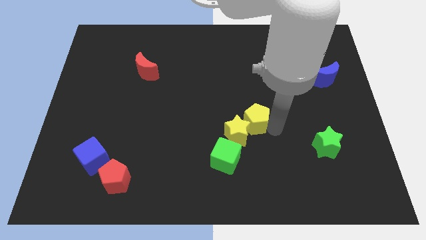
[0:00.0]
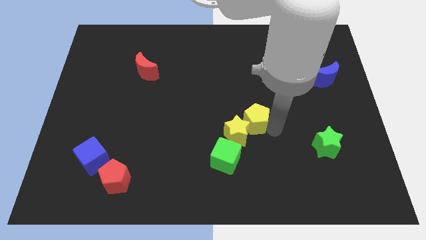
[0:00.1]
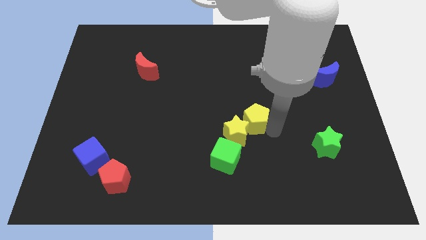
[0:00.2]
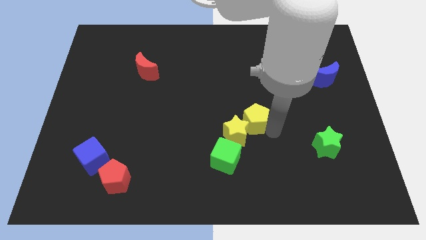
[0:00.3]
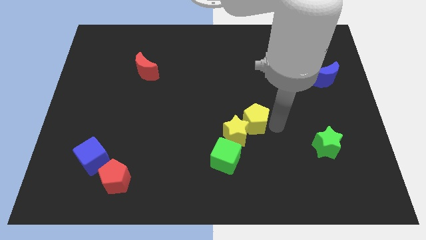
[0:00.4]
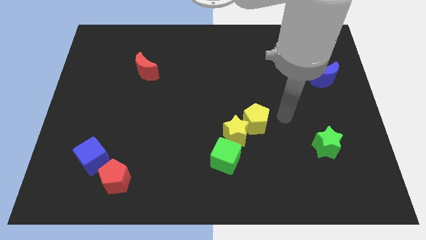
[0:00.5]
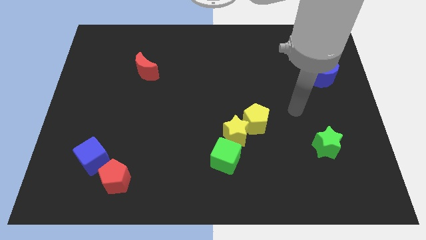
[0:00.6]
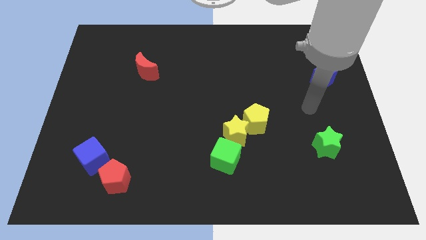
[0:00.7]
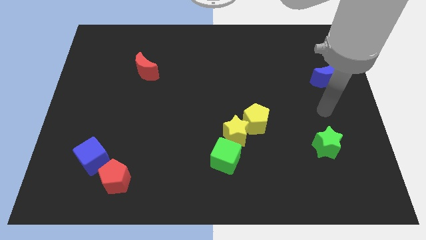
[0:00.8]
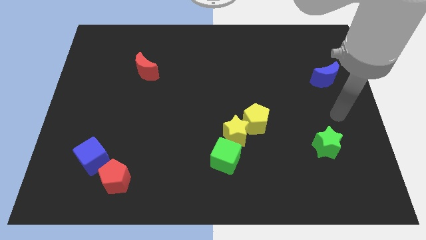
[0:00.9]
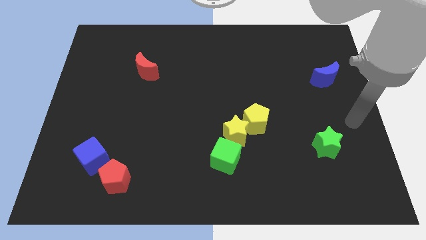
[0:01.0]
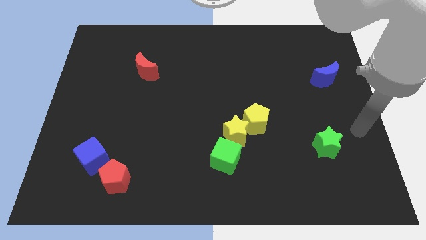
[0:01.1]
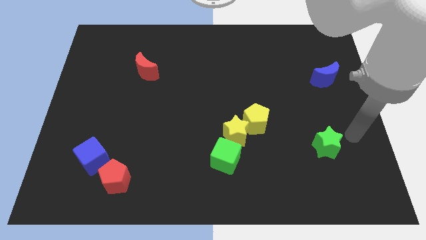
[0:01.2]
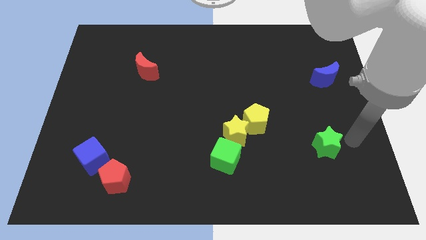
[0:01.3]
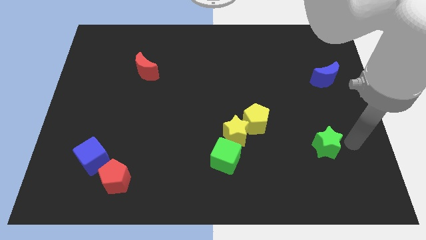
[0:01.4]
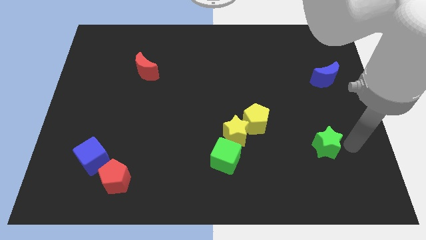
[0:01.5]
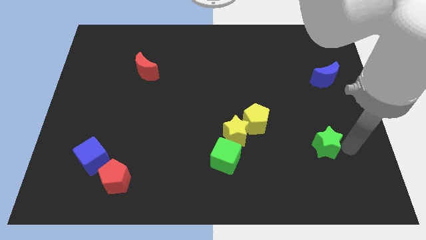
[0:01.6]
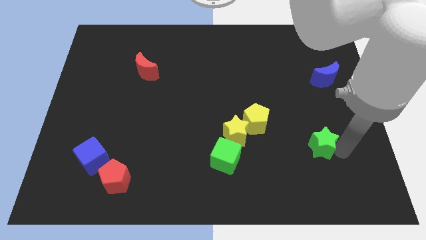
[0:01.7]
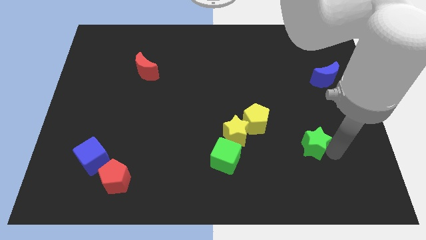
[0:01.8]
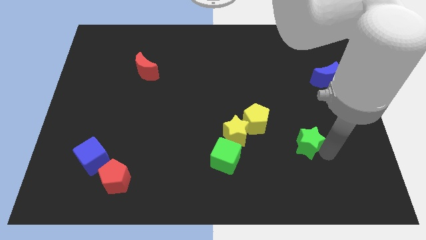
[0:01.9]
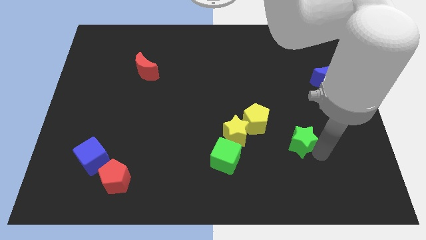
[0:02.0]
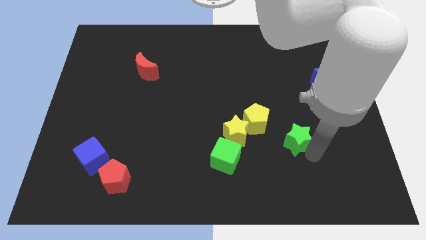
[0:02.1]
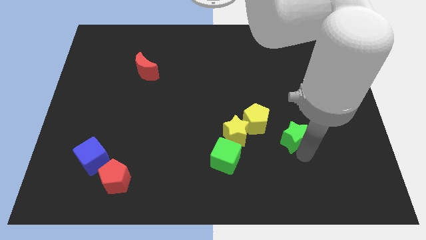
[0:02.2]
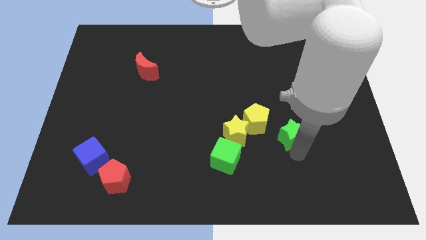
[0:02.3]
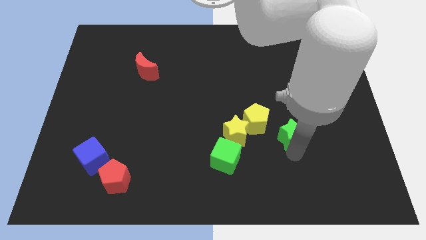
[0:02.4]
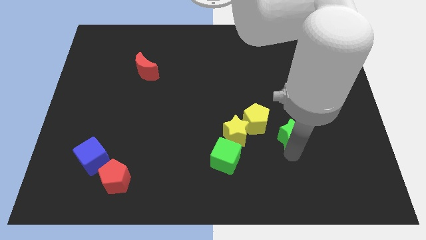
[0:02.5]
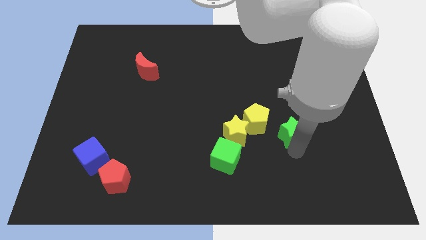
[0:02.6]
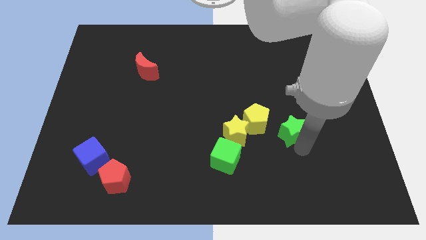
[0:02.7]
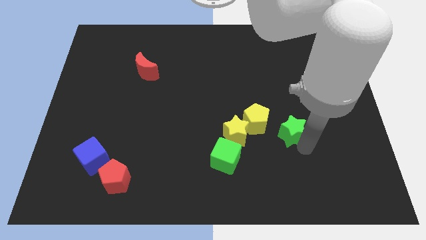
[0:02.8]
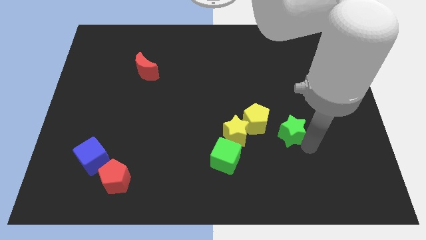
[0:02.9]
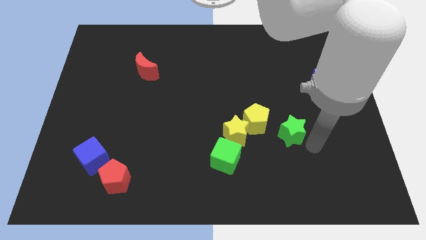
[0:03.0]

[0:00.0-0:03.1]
move the green star near the yellow pentagon

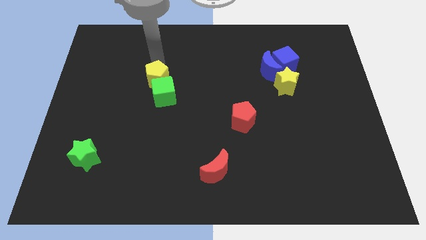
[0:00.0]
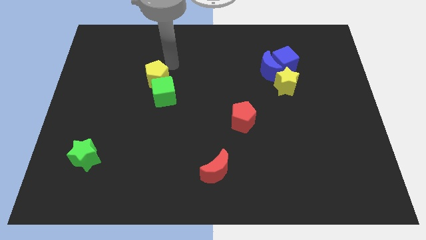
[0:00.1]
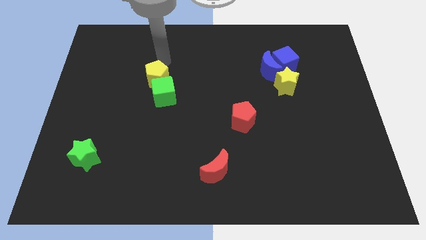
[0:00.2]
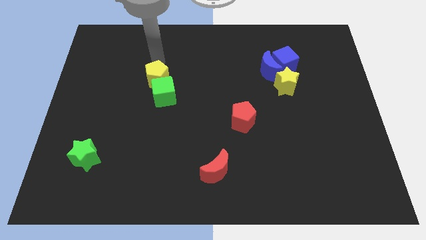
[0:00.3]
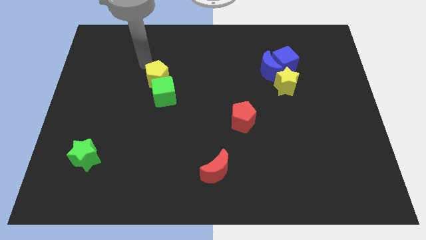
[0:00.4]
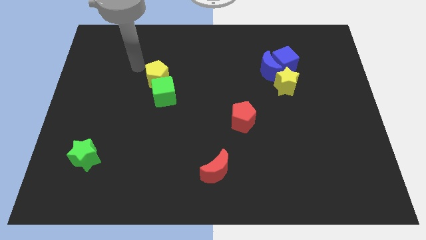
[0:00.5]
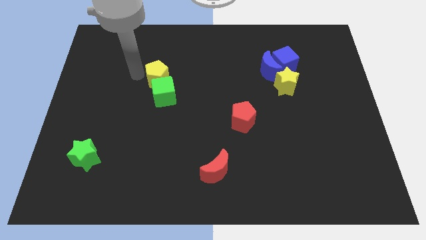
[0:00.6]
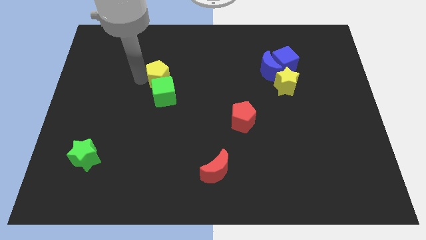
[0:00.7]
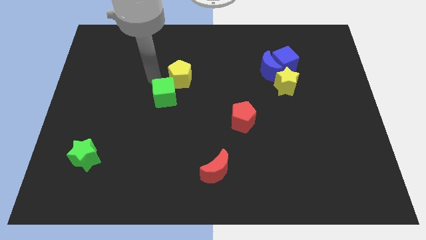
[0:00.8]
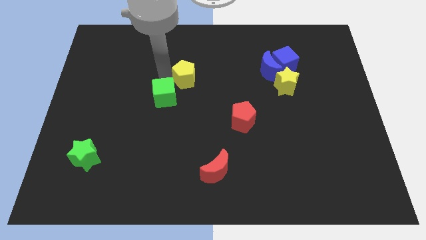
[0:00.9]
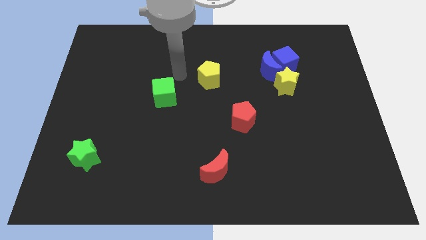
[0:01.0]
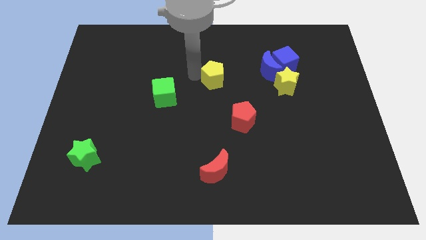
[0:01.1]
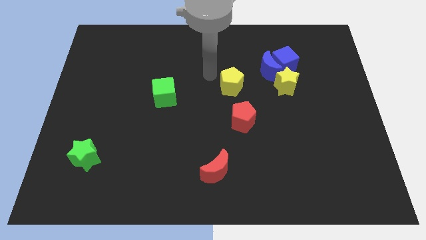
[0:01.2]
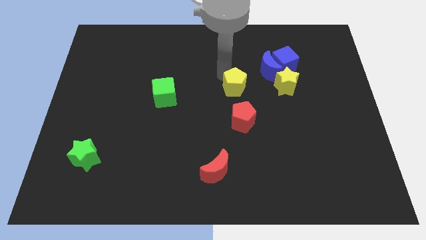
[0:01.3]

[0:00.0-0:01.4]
place yellow pentagon above the red pentagon

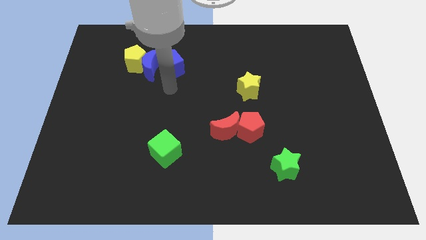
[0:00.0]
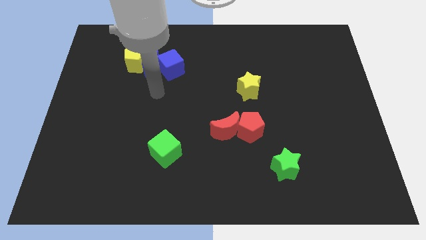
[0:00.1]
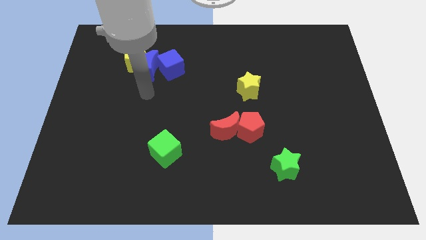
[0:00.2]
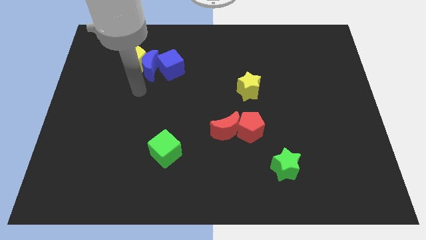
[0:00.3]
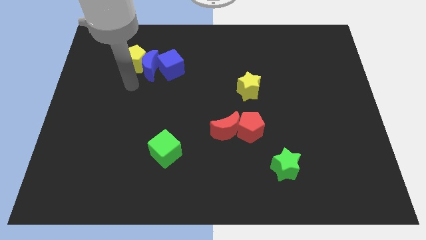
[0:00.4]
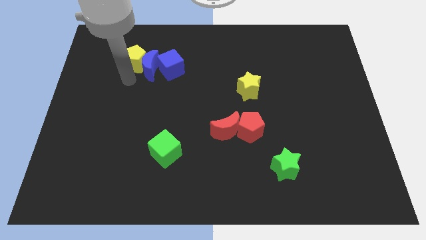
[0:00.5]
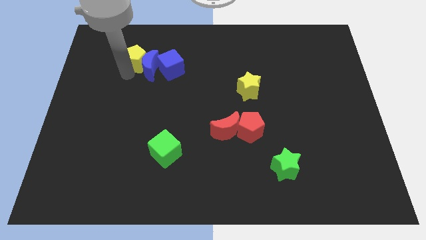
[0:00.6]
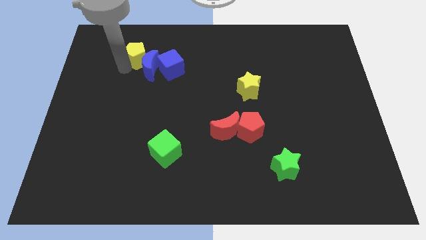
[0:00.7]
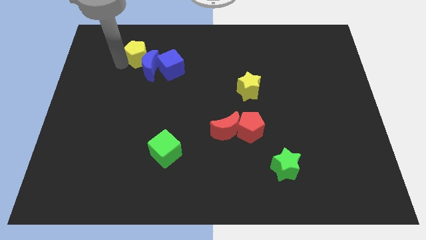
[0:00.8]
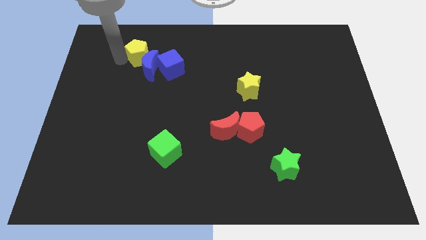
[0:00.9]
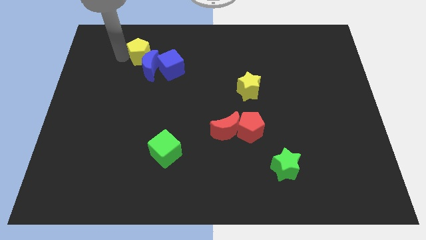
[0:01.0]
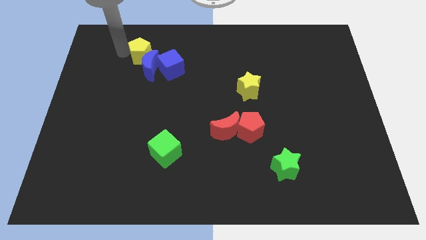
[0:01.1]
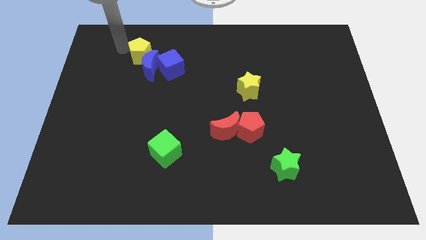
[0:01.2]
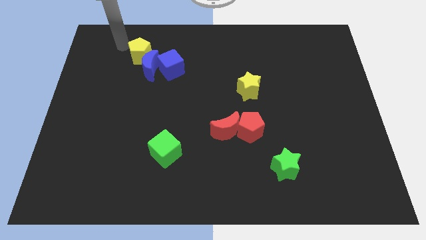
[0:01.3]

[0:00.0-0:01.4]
slightly push the yellow pentagon towards the top side

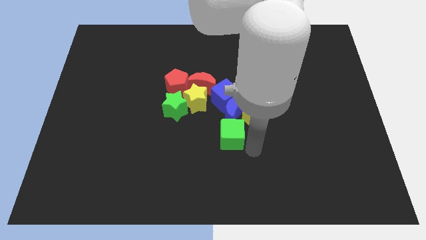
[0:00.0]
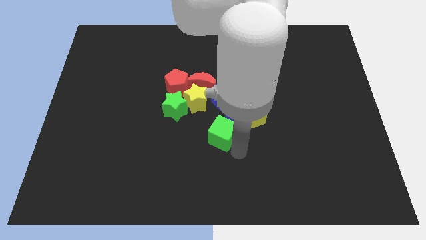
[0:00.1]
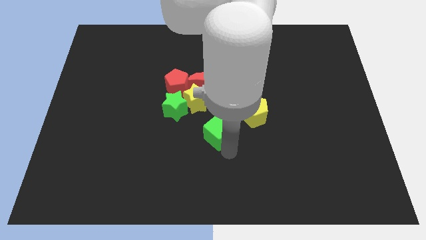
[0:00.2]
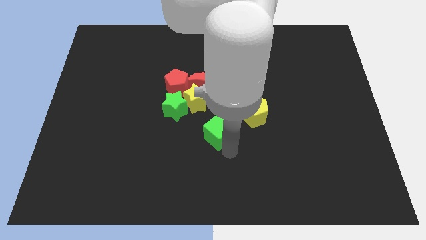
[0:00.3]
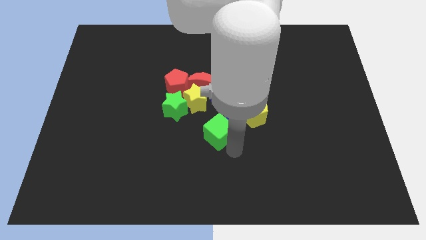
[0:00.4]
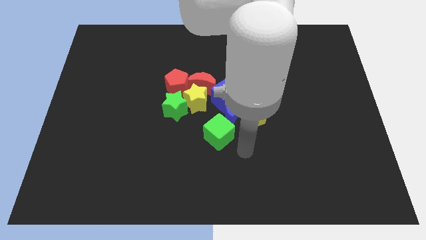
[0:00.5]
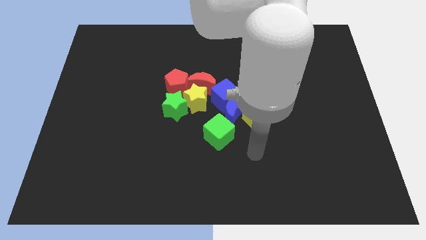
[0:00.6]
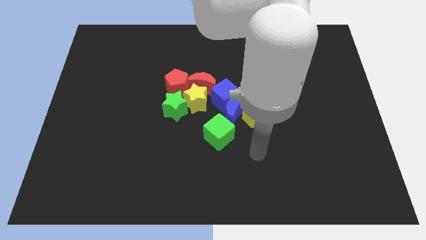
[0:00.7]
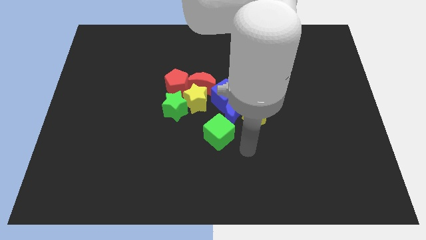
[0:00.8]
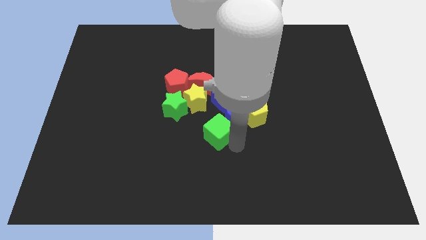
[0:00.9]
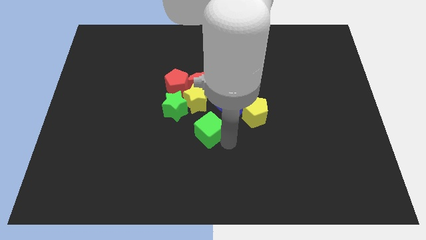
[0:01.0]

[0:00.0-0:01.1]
separate the green cube from the yellow pentagon

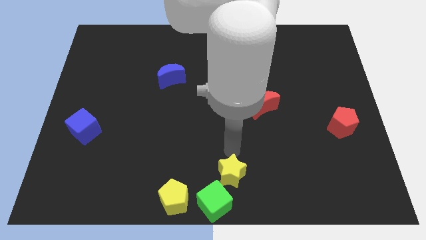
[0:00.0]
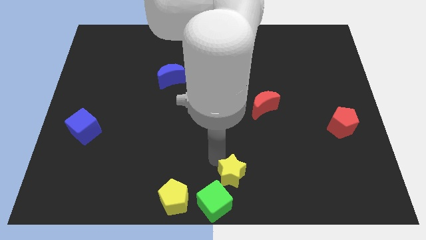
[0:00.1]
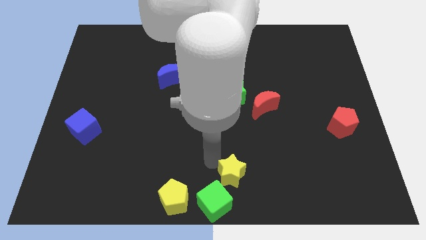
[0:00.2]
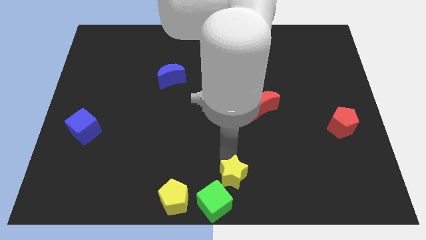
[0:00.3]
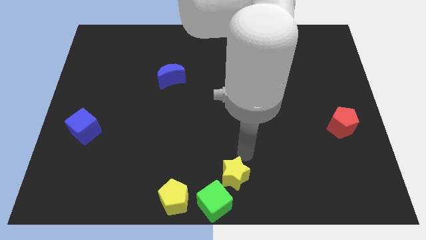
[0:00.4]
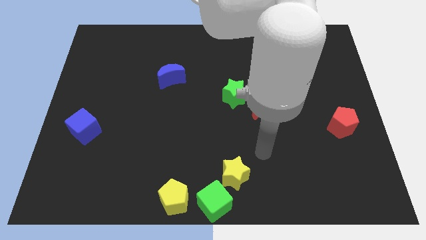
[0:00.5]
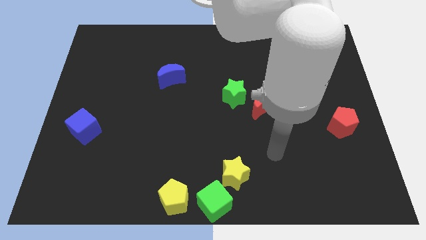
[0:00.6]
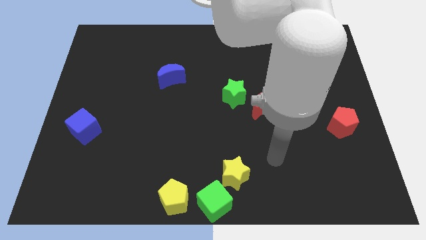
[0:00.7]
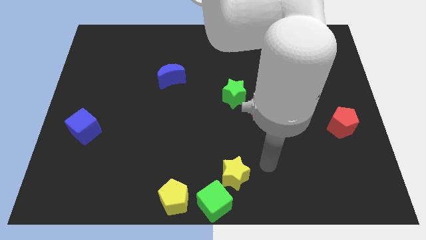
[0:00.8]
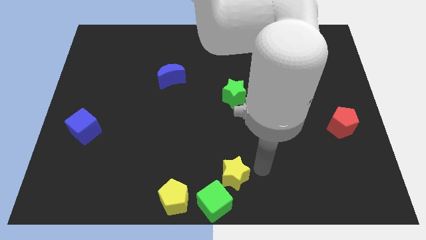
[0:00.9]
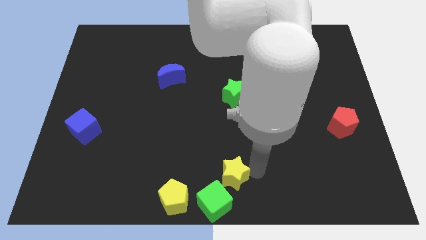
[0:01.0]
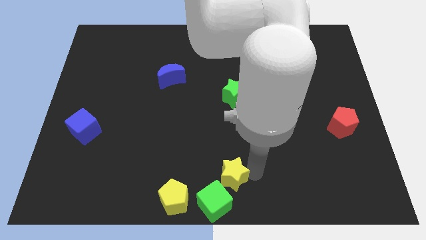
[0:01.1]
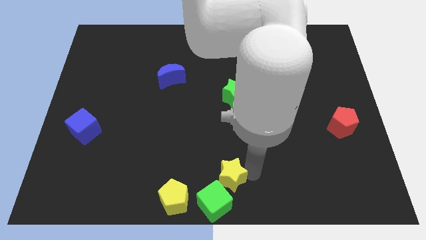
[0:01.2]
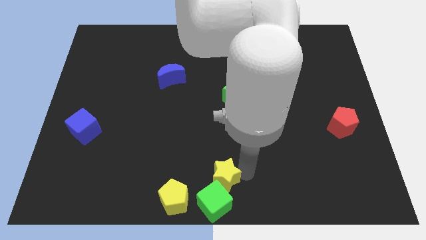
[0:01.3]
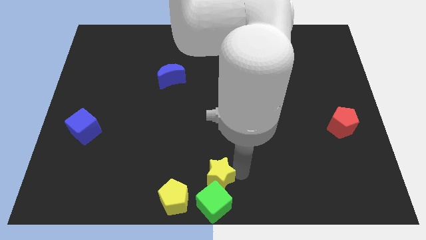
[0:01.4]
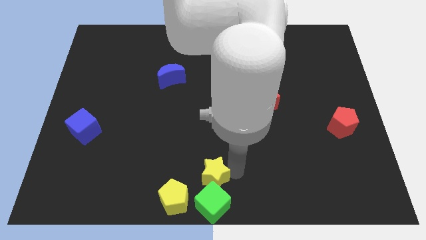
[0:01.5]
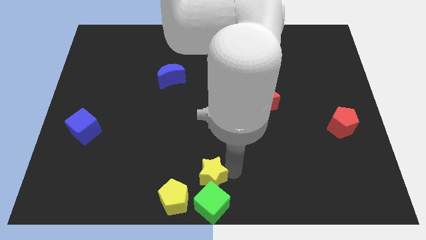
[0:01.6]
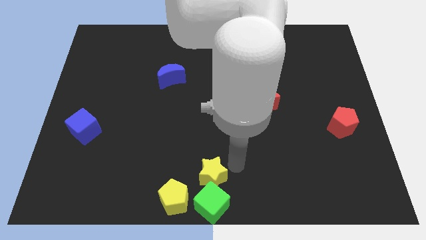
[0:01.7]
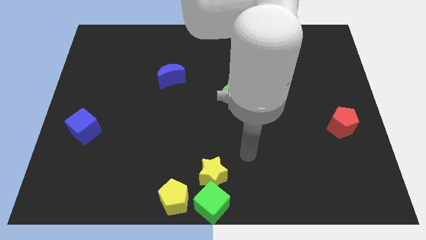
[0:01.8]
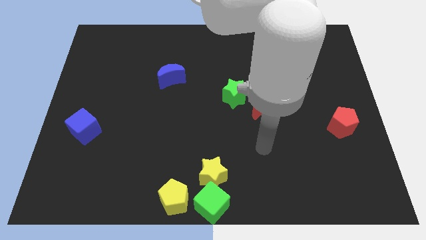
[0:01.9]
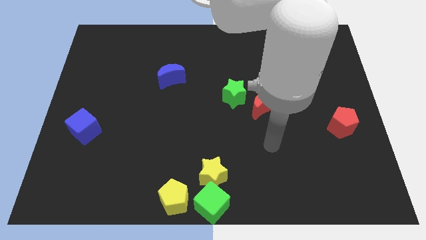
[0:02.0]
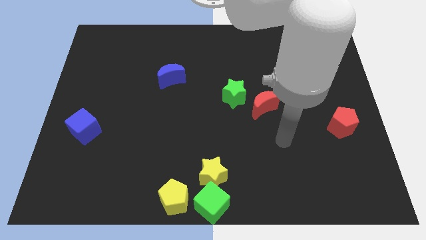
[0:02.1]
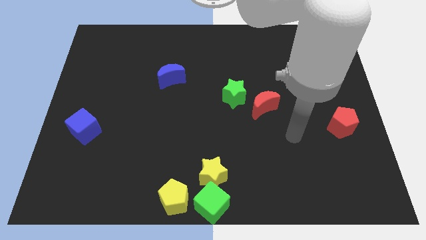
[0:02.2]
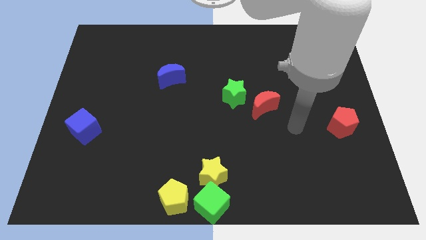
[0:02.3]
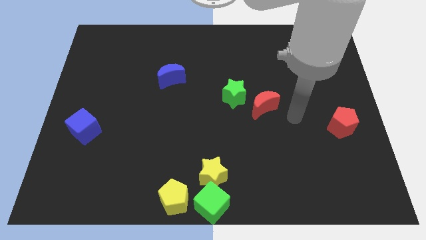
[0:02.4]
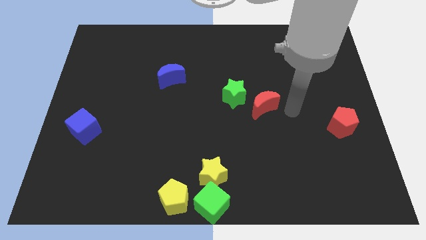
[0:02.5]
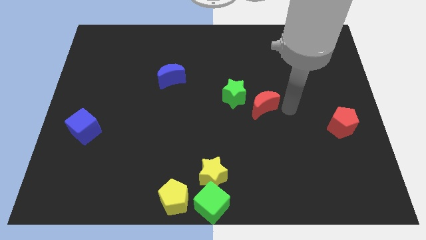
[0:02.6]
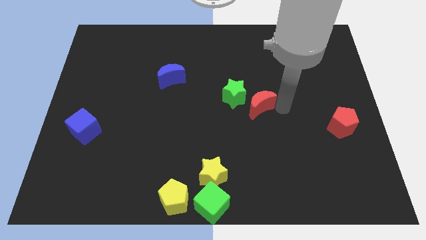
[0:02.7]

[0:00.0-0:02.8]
put the yellow star at the top of the green cube
